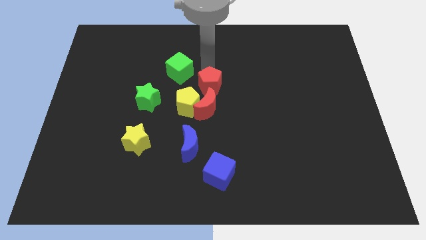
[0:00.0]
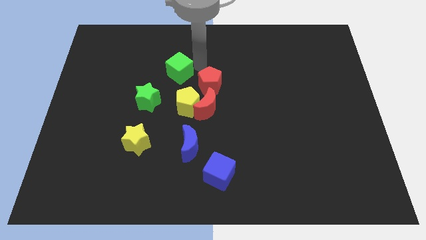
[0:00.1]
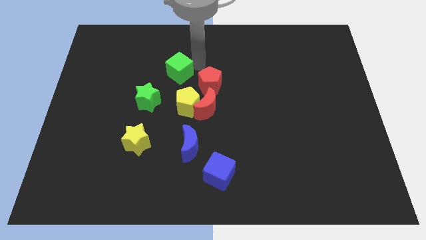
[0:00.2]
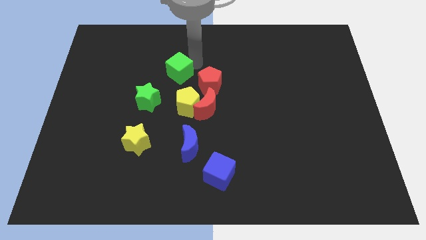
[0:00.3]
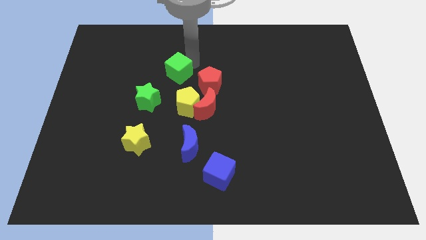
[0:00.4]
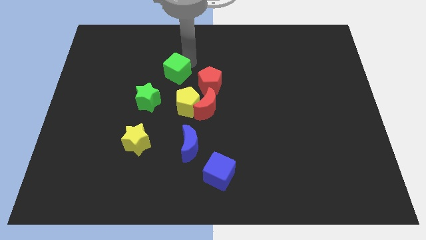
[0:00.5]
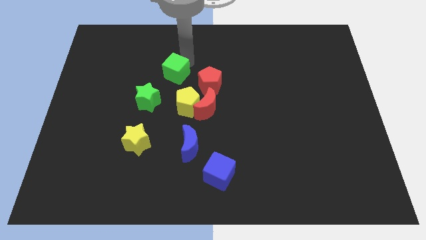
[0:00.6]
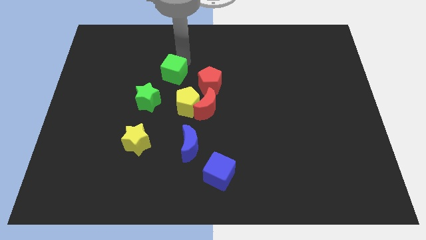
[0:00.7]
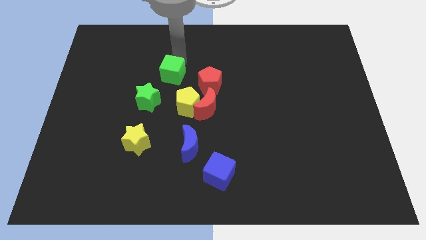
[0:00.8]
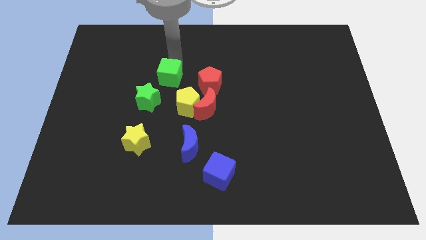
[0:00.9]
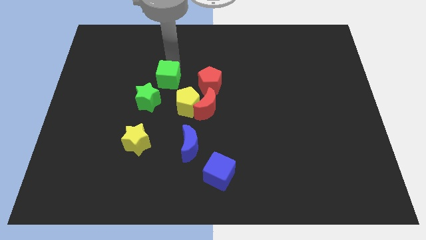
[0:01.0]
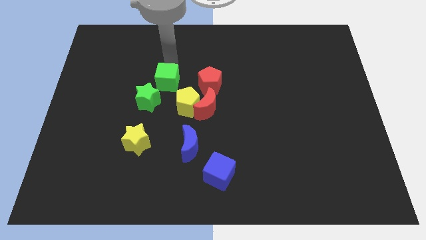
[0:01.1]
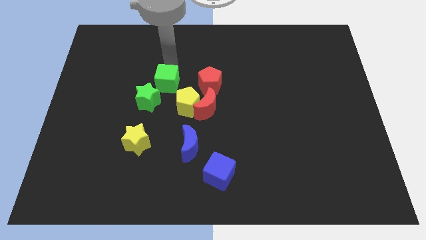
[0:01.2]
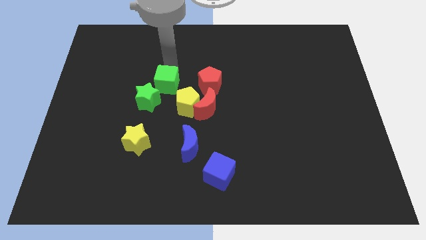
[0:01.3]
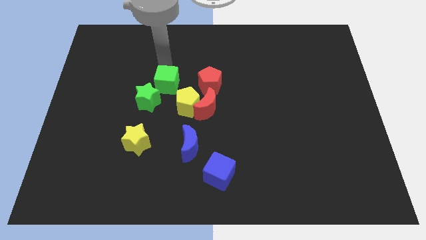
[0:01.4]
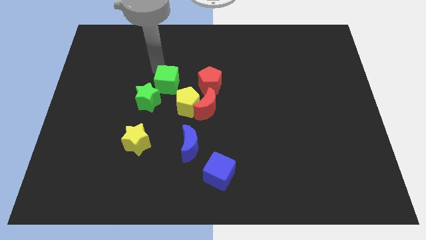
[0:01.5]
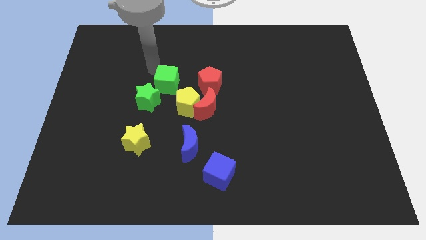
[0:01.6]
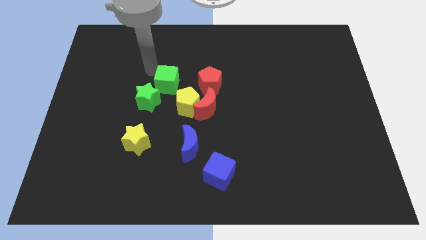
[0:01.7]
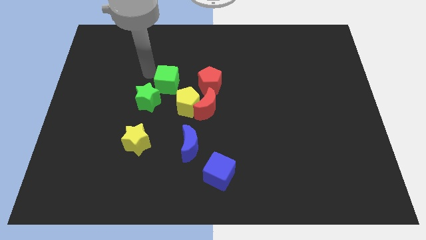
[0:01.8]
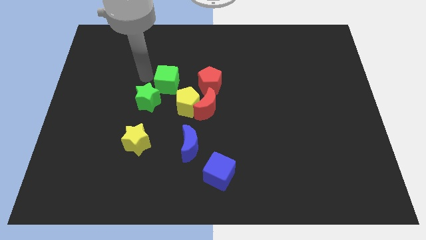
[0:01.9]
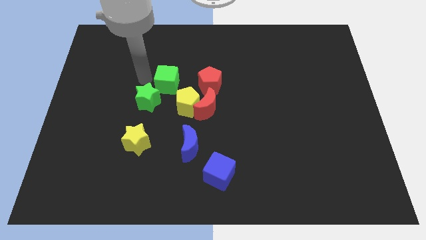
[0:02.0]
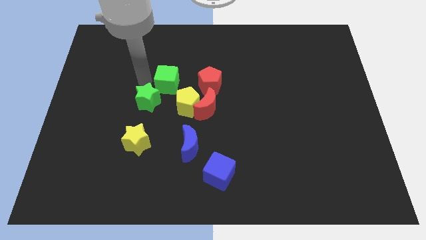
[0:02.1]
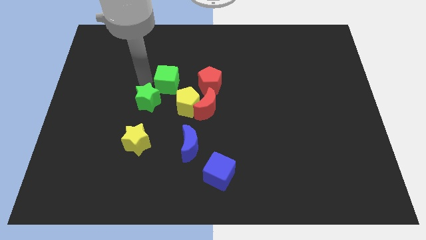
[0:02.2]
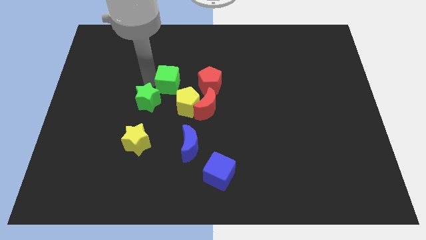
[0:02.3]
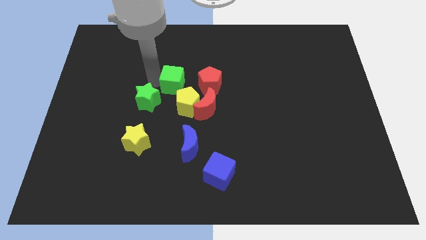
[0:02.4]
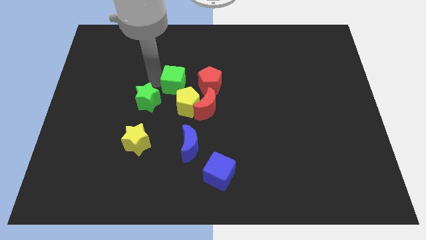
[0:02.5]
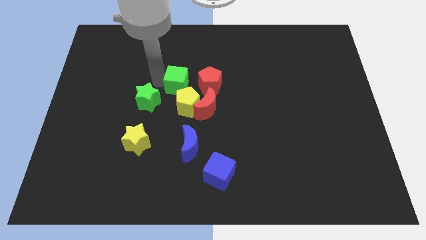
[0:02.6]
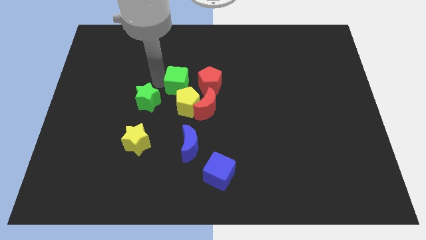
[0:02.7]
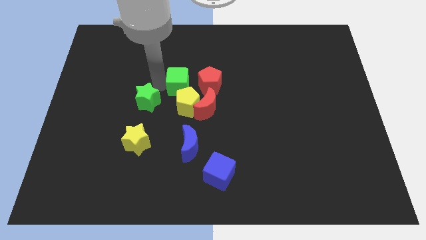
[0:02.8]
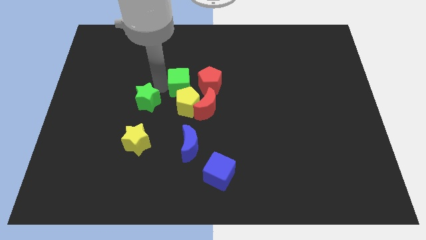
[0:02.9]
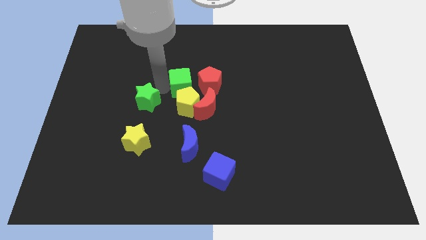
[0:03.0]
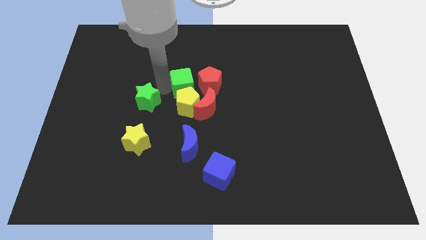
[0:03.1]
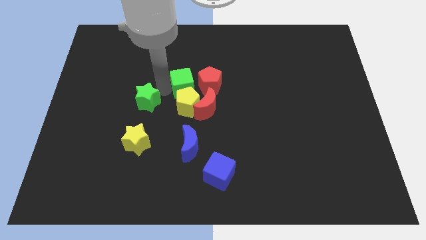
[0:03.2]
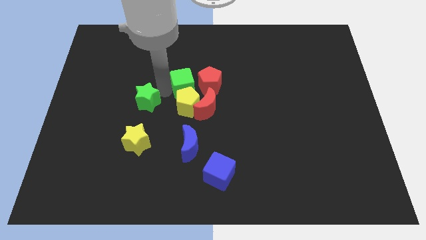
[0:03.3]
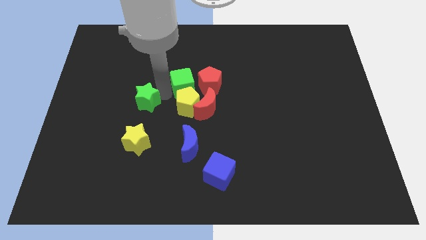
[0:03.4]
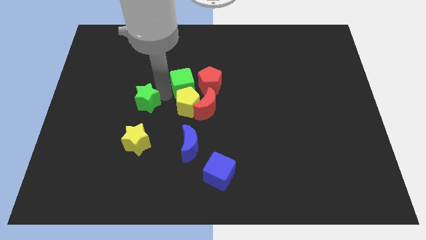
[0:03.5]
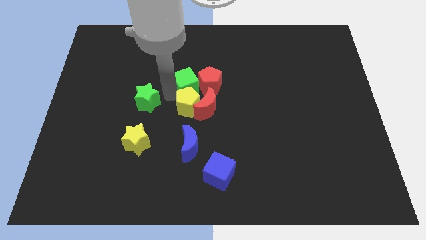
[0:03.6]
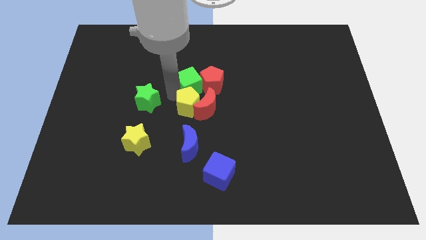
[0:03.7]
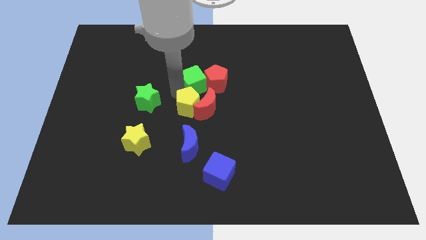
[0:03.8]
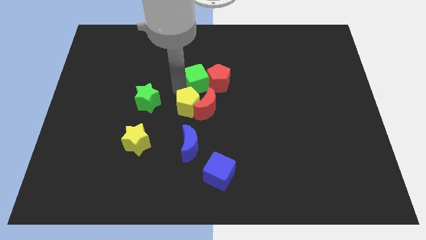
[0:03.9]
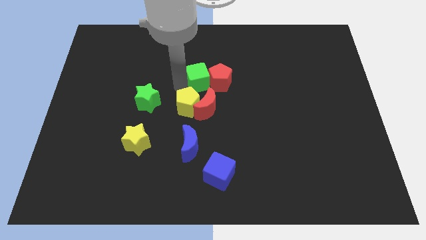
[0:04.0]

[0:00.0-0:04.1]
separate the red blocks with the green cube

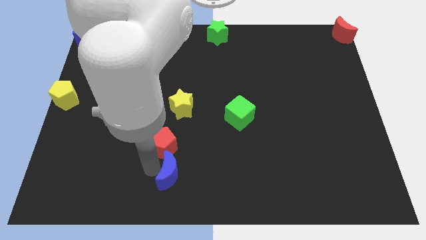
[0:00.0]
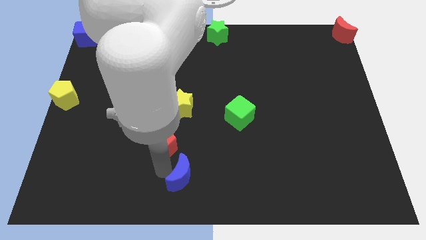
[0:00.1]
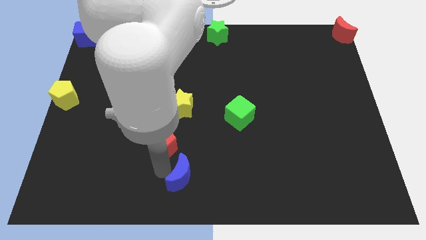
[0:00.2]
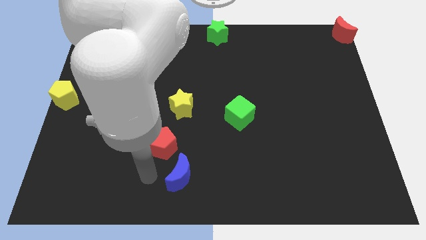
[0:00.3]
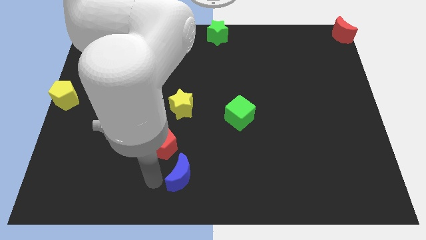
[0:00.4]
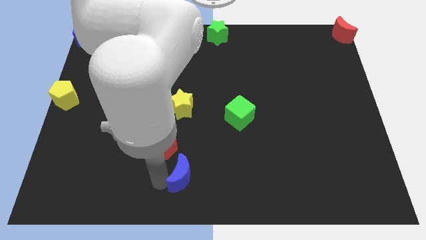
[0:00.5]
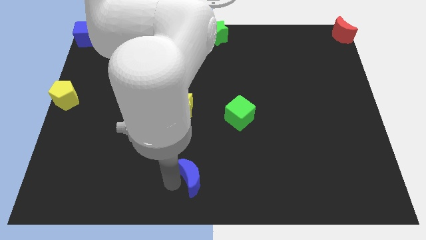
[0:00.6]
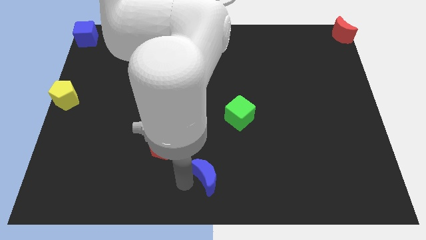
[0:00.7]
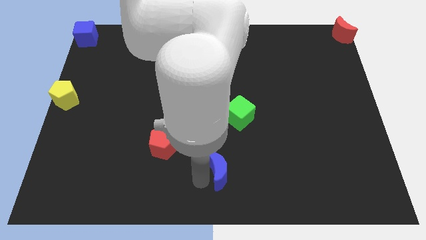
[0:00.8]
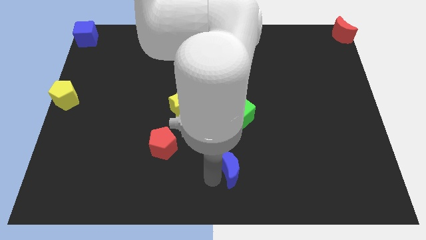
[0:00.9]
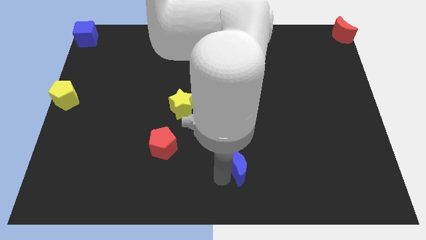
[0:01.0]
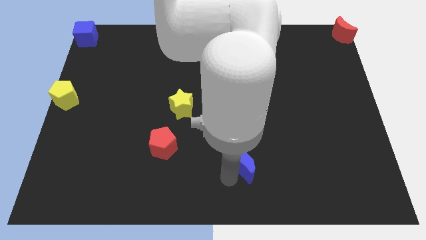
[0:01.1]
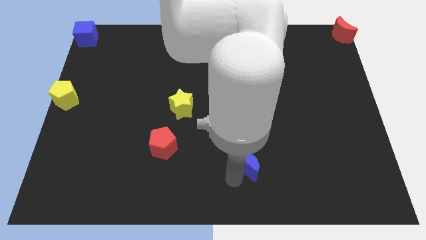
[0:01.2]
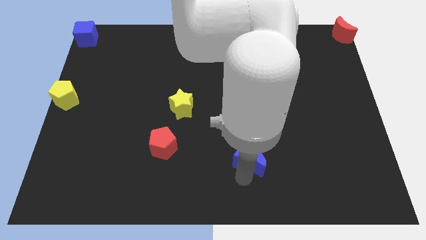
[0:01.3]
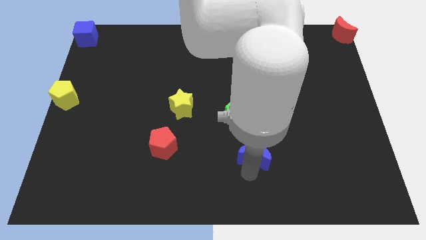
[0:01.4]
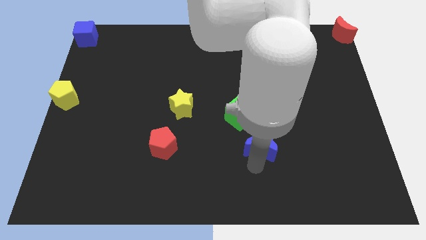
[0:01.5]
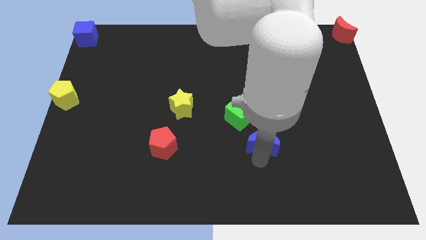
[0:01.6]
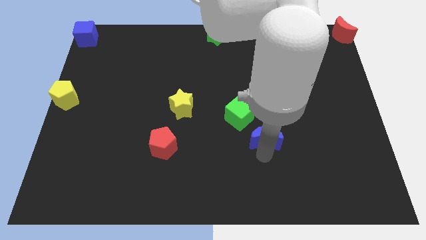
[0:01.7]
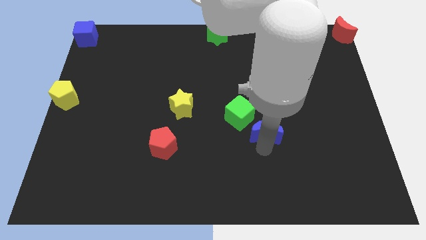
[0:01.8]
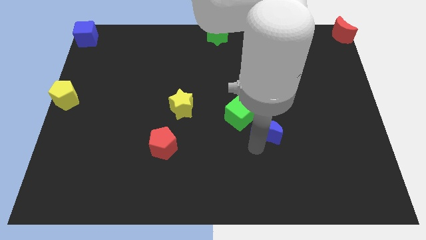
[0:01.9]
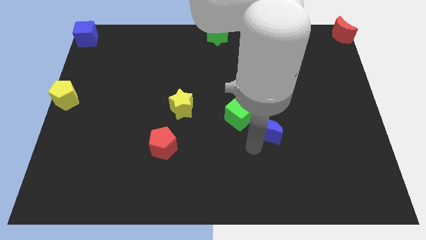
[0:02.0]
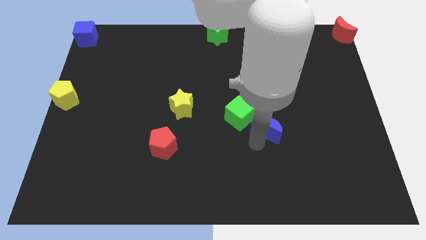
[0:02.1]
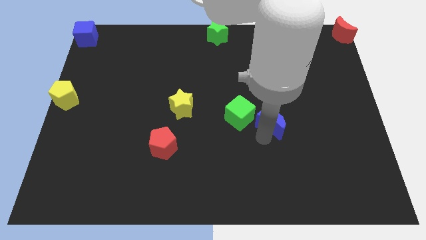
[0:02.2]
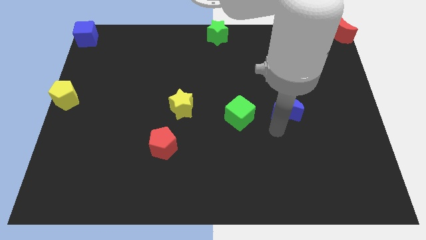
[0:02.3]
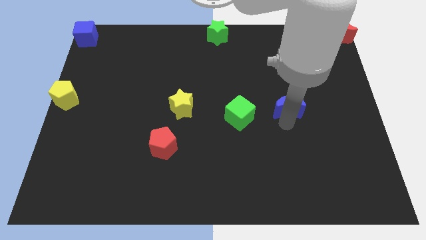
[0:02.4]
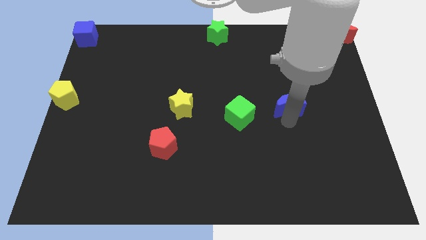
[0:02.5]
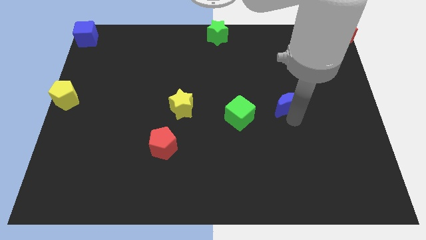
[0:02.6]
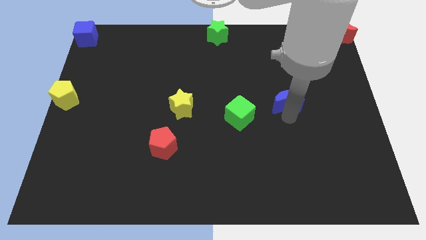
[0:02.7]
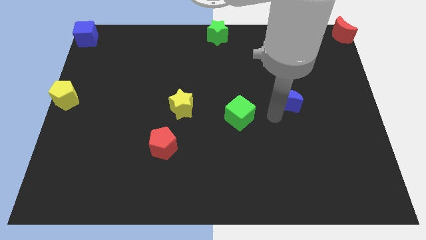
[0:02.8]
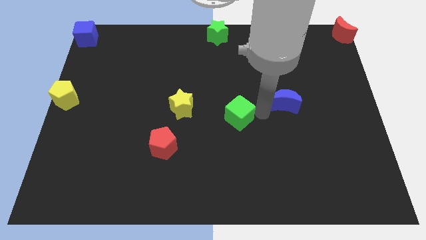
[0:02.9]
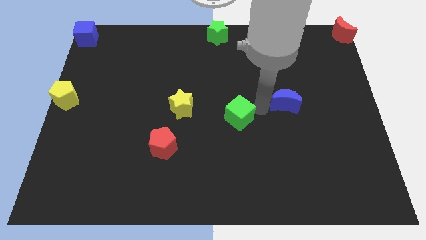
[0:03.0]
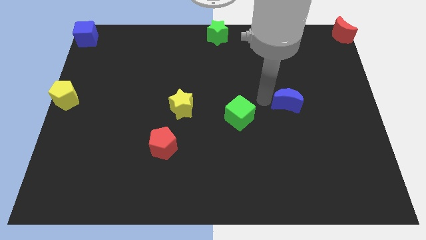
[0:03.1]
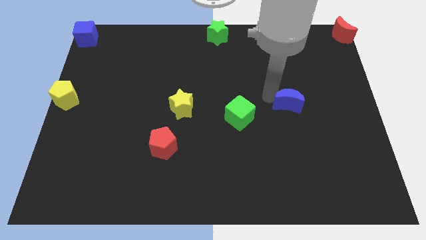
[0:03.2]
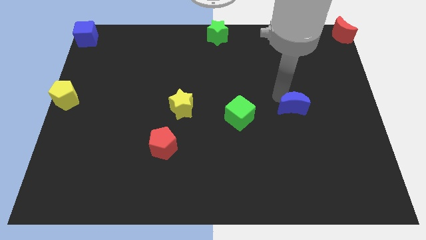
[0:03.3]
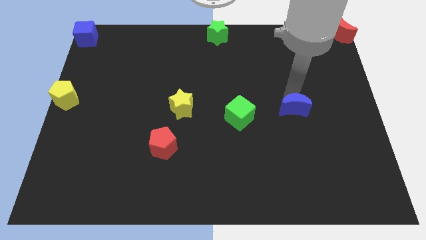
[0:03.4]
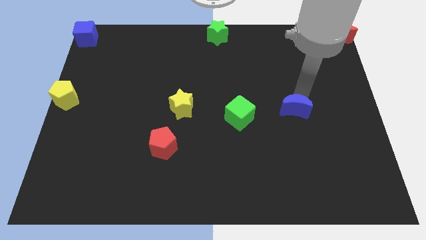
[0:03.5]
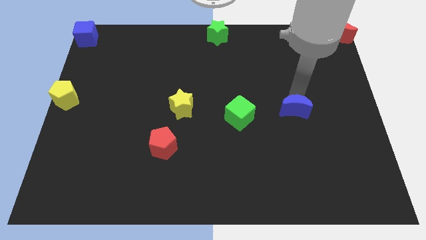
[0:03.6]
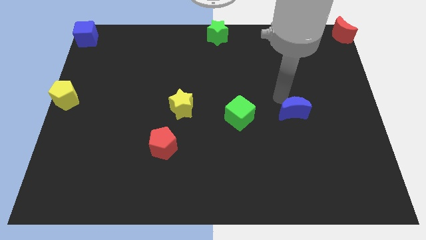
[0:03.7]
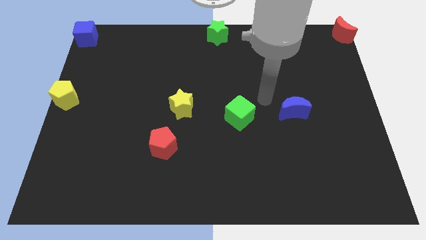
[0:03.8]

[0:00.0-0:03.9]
move blue moon to the right side of the green cube

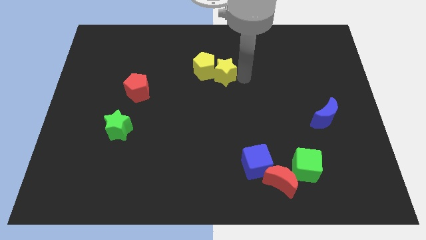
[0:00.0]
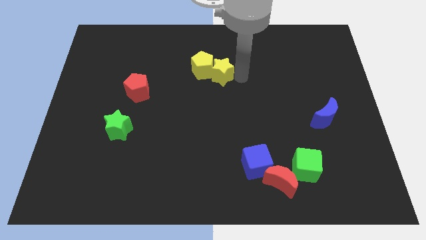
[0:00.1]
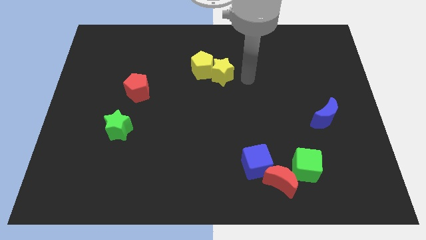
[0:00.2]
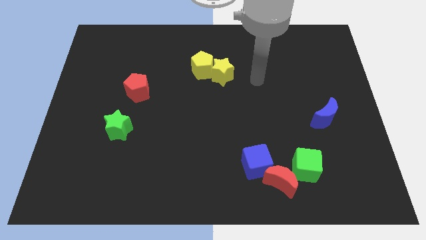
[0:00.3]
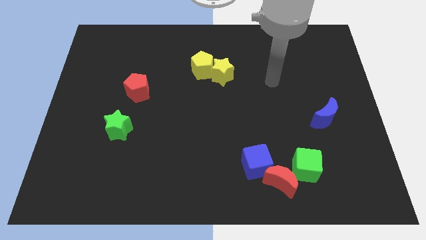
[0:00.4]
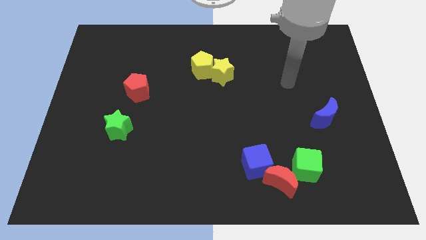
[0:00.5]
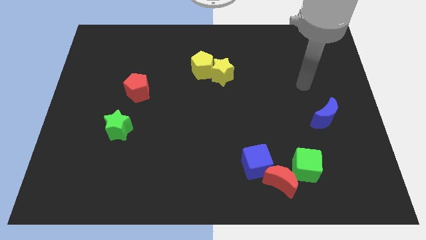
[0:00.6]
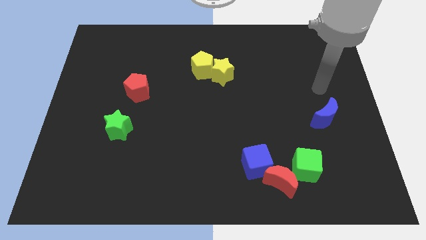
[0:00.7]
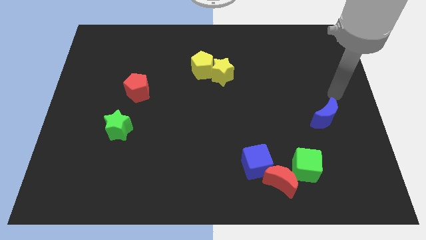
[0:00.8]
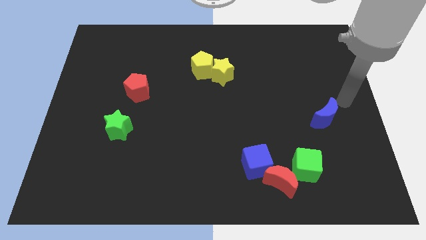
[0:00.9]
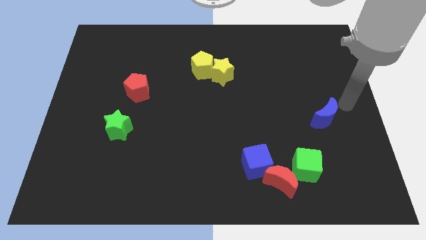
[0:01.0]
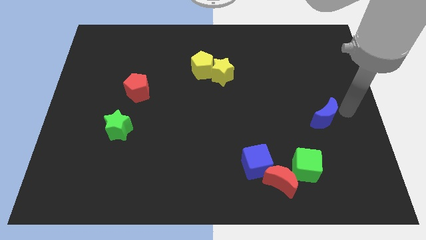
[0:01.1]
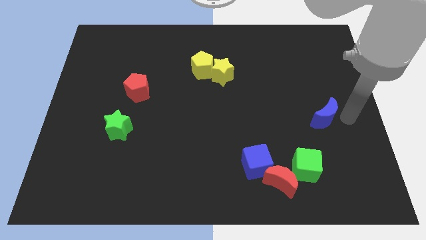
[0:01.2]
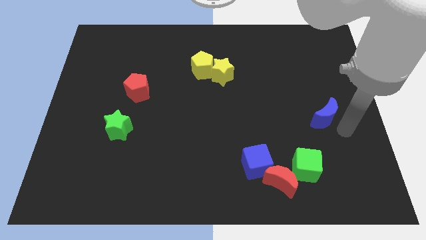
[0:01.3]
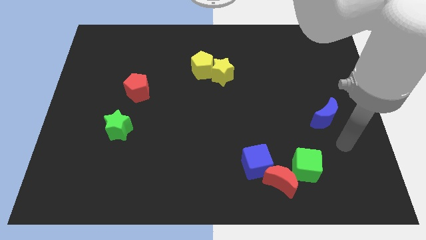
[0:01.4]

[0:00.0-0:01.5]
move the arm away from the yellow star
